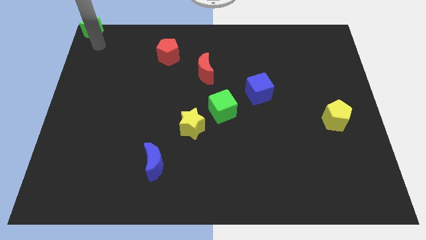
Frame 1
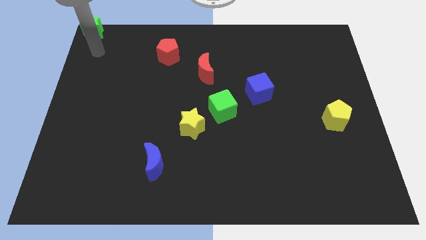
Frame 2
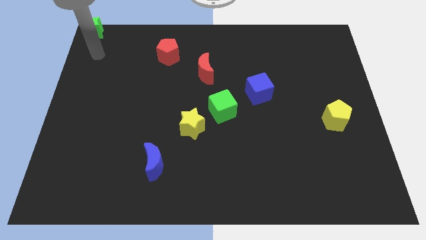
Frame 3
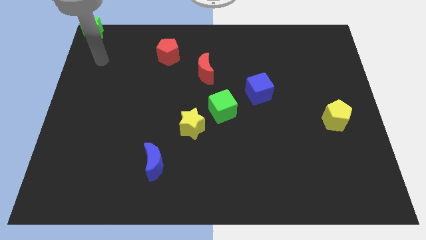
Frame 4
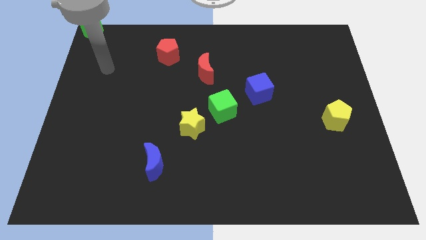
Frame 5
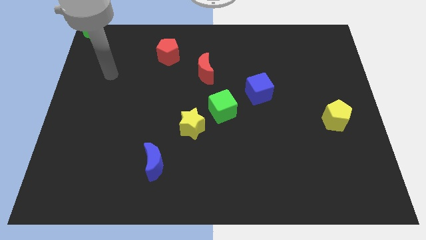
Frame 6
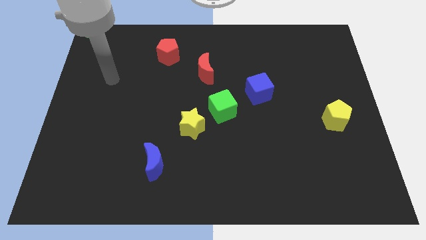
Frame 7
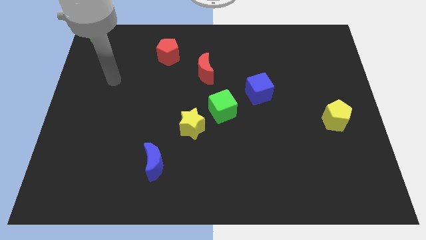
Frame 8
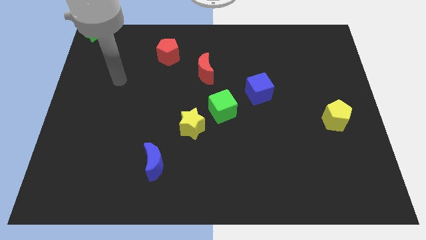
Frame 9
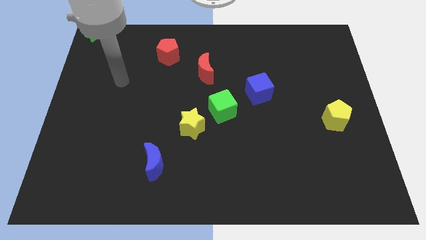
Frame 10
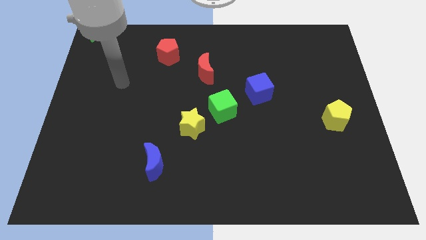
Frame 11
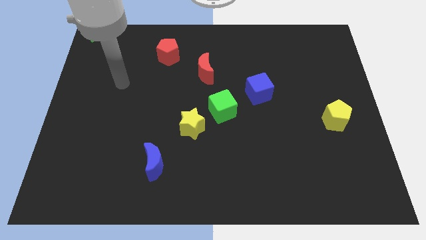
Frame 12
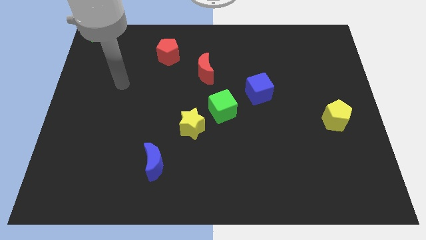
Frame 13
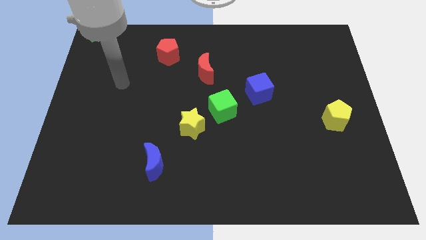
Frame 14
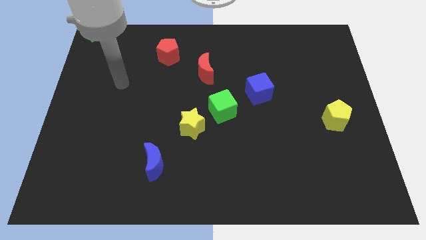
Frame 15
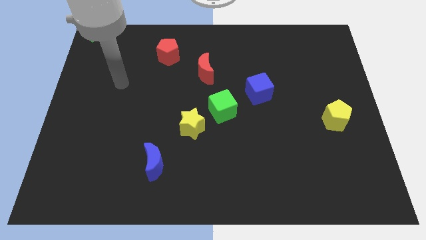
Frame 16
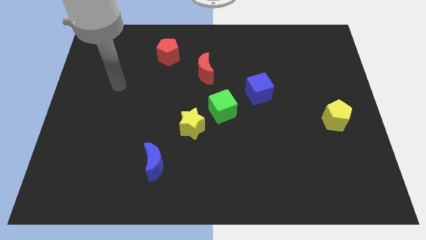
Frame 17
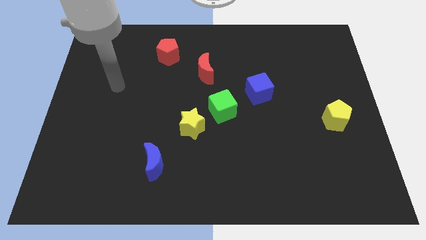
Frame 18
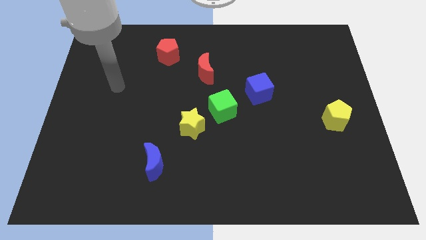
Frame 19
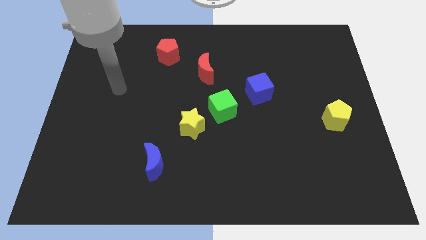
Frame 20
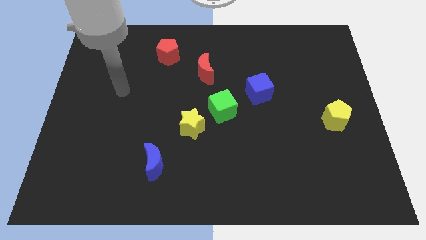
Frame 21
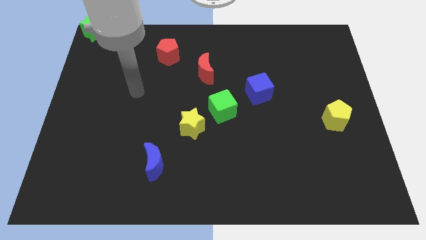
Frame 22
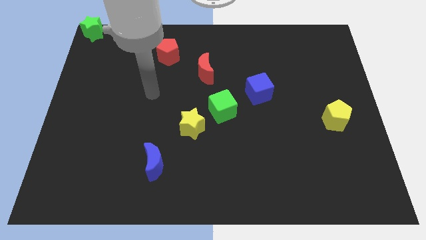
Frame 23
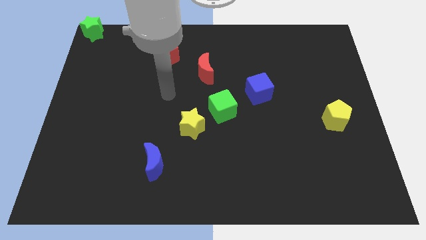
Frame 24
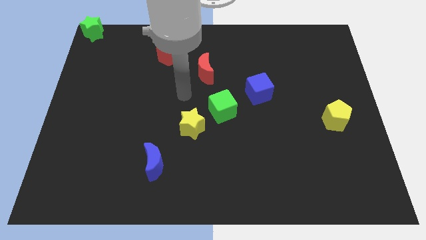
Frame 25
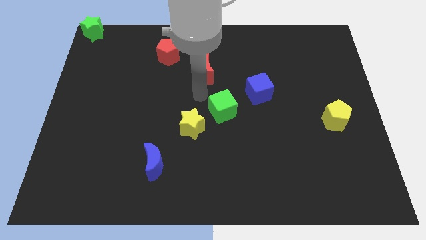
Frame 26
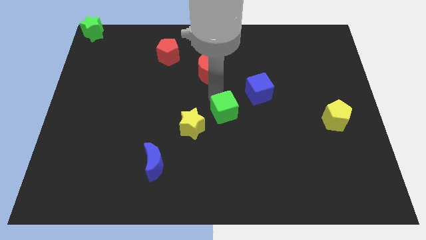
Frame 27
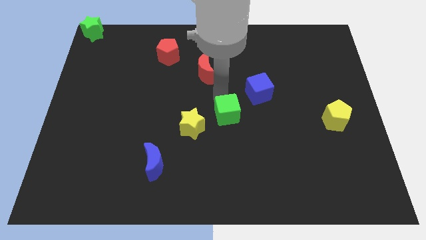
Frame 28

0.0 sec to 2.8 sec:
move your arm away from the green star

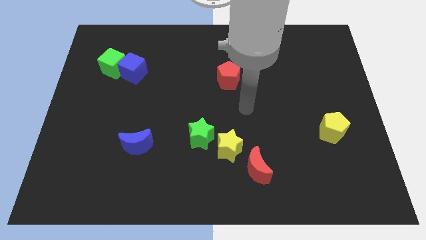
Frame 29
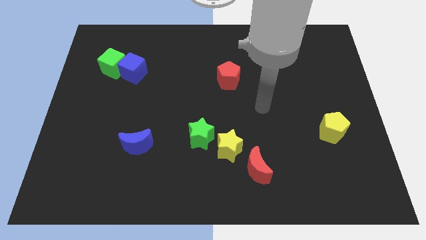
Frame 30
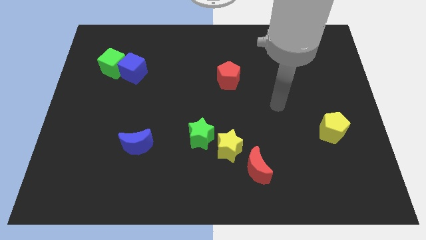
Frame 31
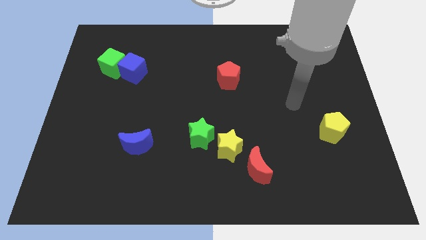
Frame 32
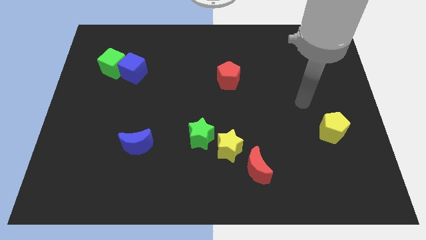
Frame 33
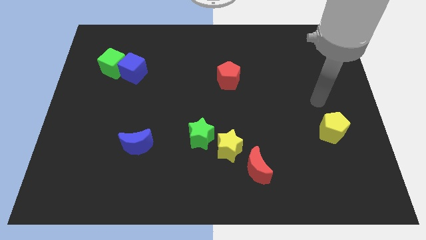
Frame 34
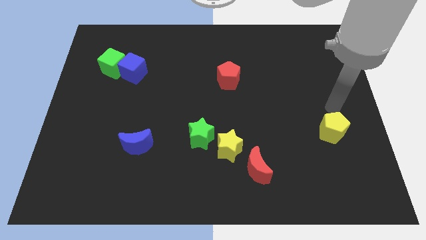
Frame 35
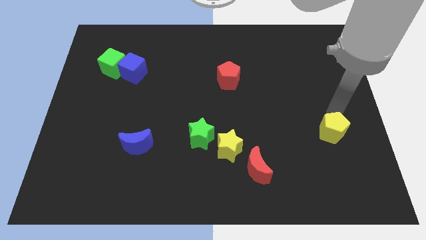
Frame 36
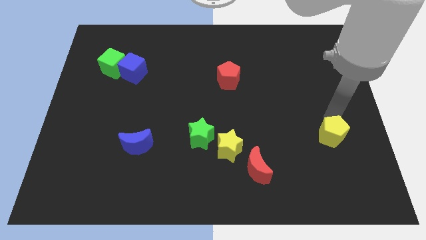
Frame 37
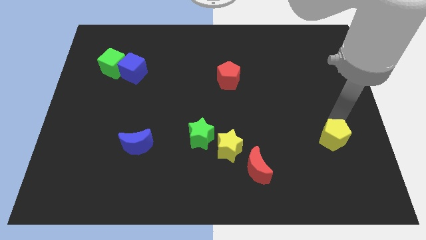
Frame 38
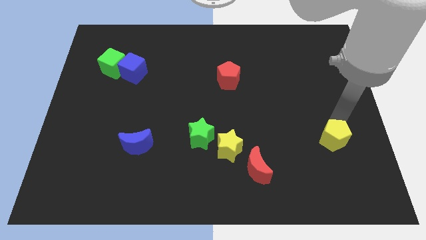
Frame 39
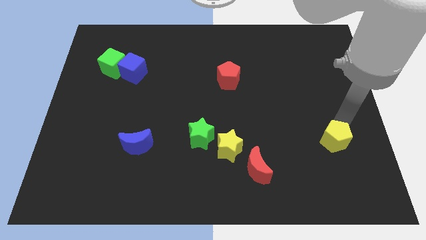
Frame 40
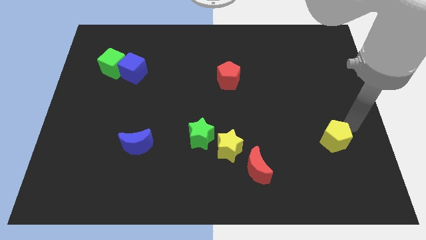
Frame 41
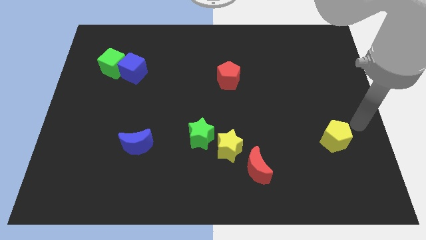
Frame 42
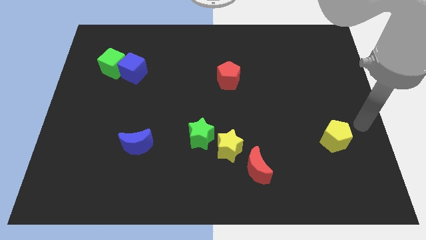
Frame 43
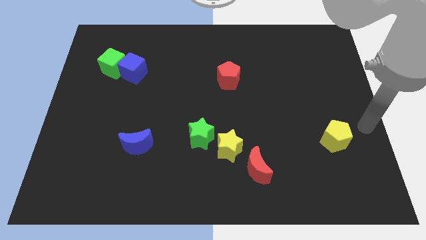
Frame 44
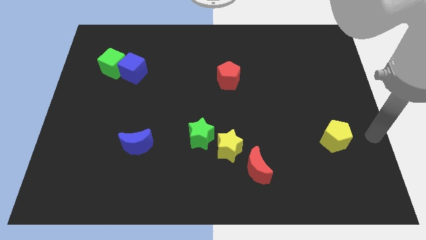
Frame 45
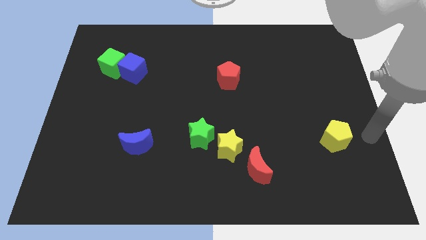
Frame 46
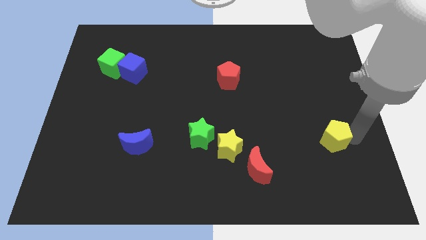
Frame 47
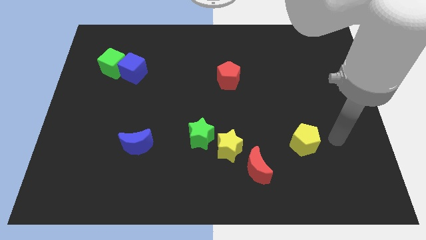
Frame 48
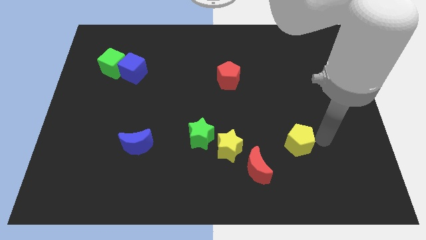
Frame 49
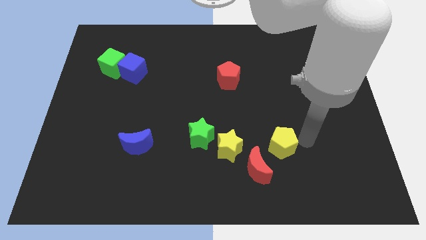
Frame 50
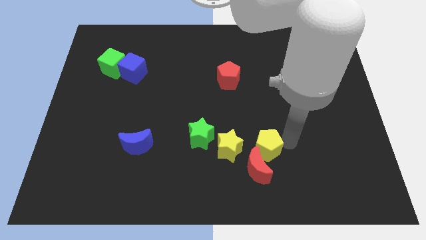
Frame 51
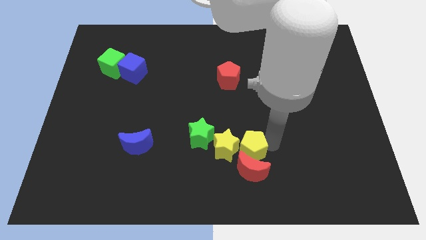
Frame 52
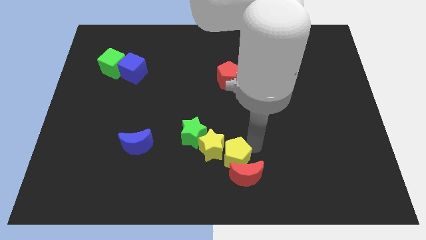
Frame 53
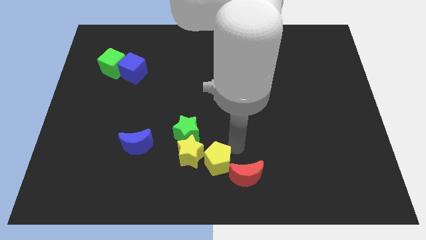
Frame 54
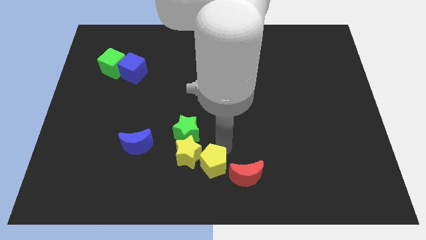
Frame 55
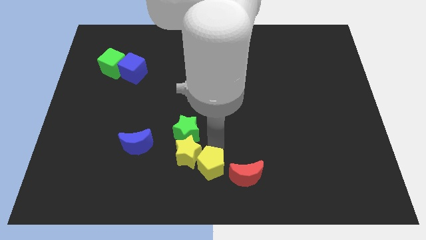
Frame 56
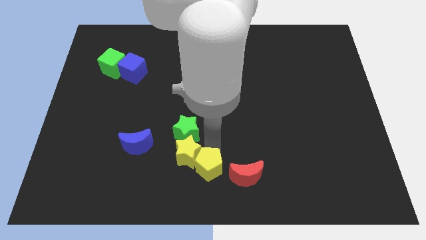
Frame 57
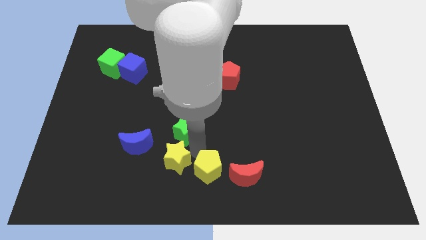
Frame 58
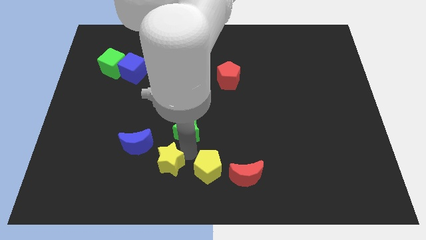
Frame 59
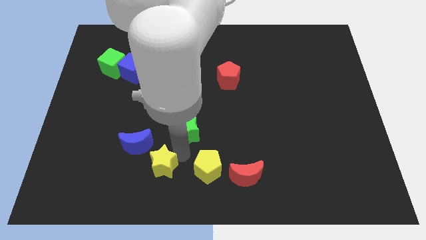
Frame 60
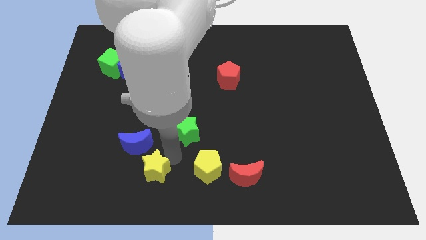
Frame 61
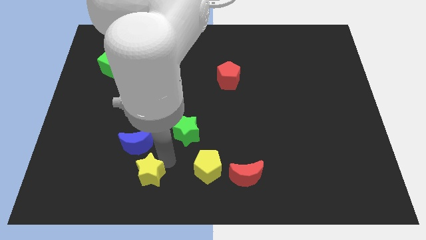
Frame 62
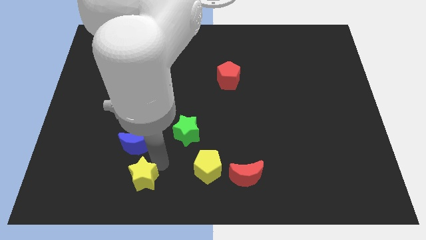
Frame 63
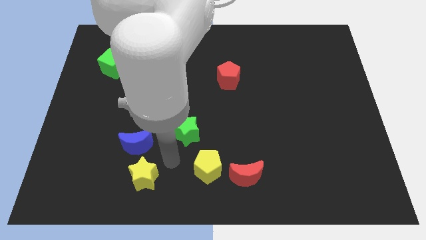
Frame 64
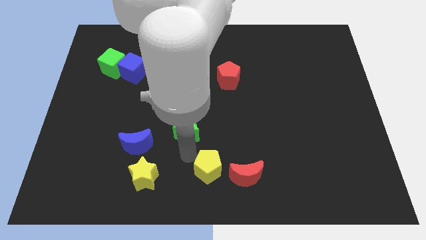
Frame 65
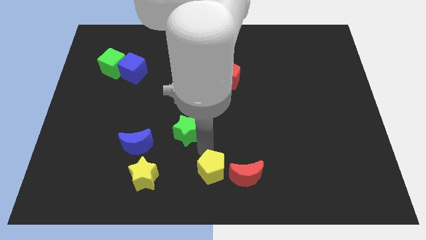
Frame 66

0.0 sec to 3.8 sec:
mmove the red moon with the yellow pentagon

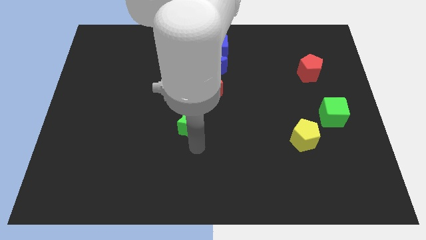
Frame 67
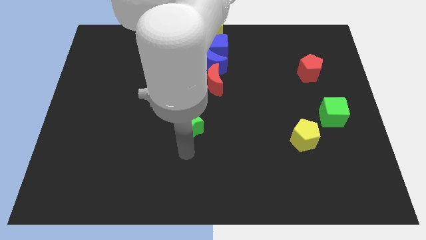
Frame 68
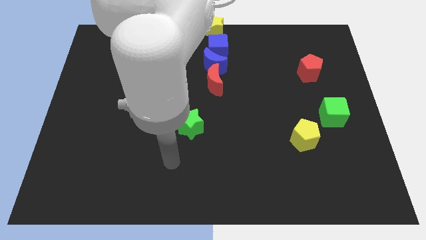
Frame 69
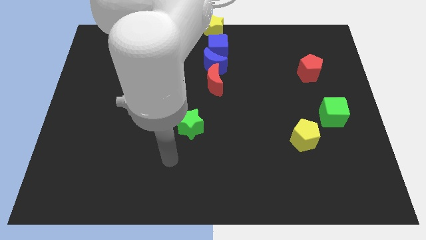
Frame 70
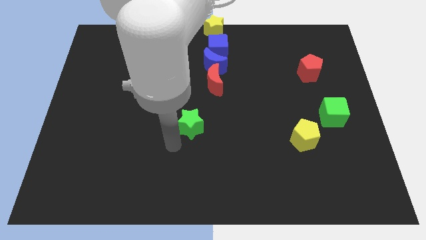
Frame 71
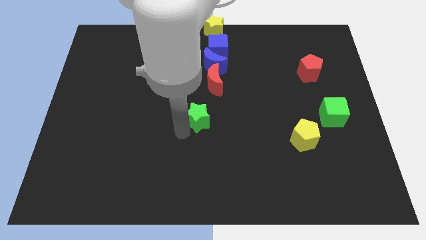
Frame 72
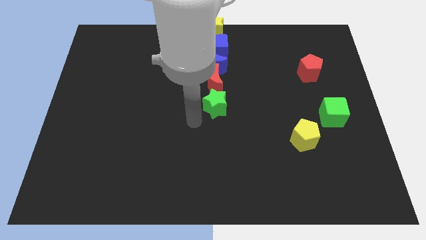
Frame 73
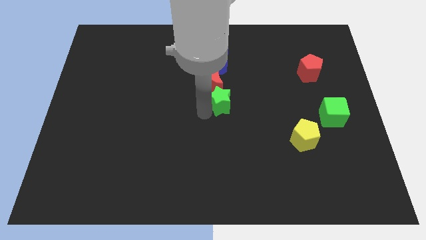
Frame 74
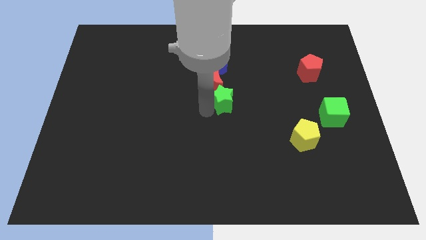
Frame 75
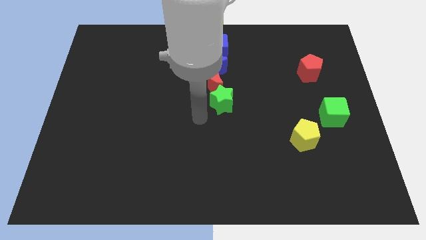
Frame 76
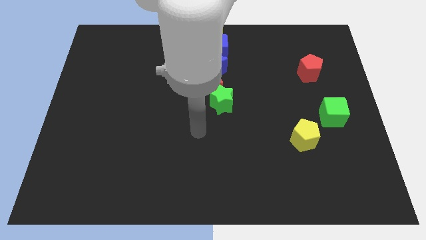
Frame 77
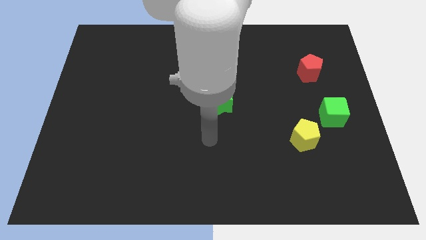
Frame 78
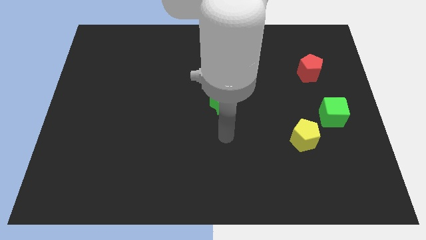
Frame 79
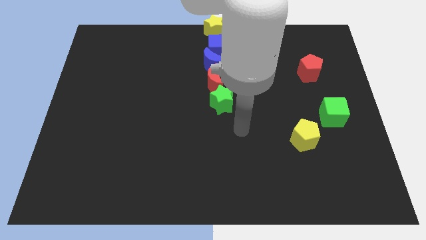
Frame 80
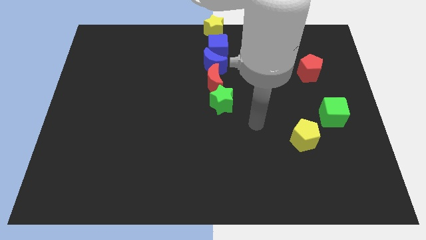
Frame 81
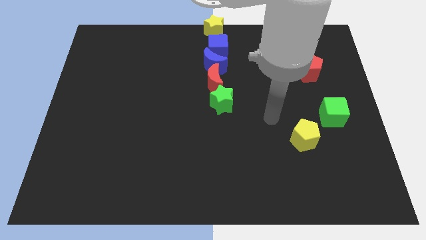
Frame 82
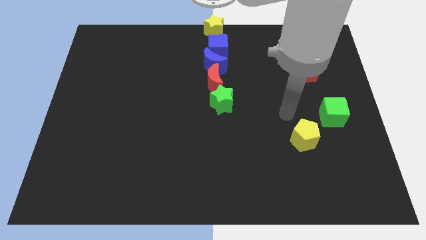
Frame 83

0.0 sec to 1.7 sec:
move the green star into the red moon

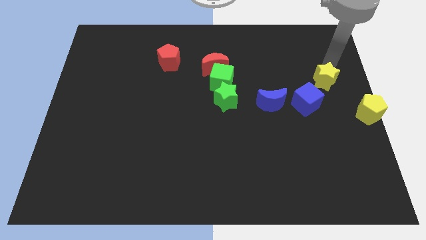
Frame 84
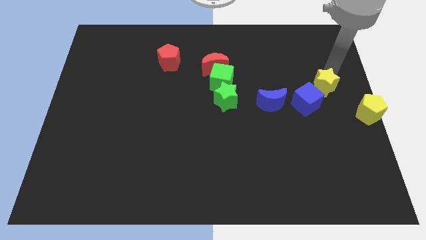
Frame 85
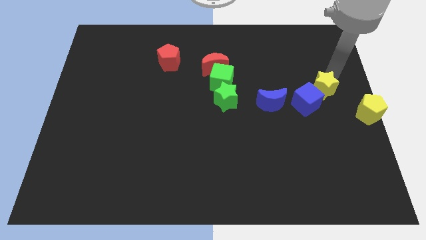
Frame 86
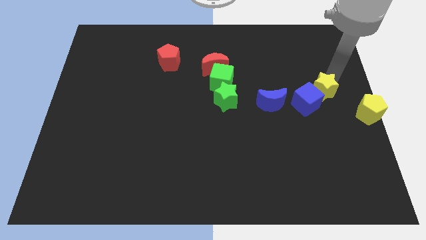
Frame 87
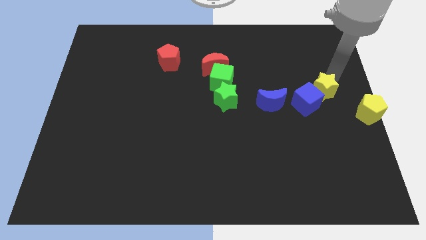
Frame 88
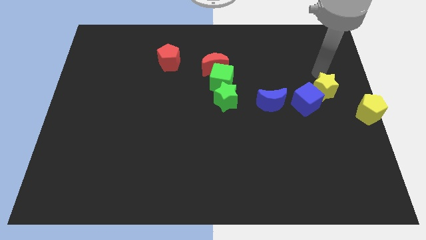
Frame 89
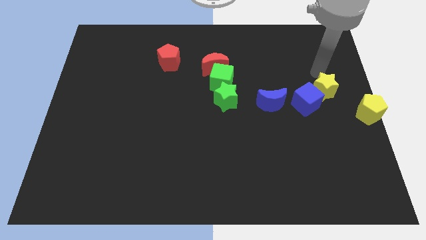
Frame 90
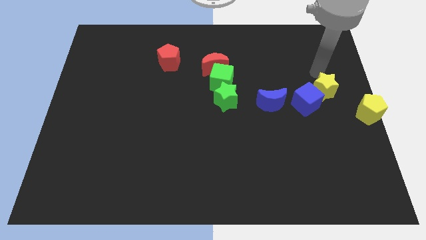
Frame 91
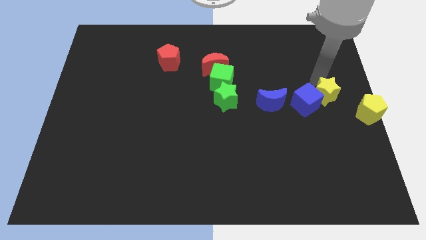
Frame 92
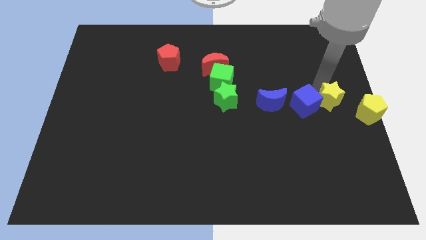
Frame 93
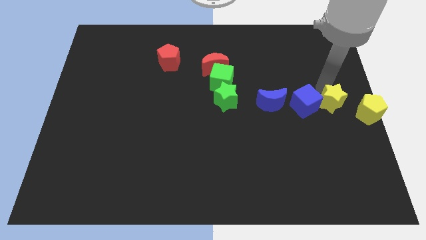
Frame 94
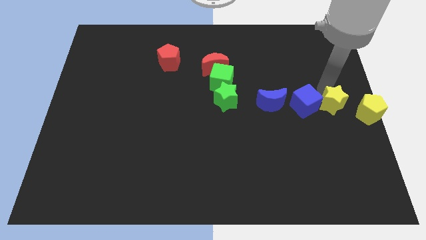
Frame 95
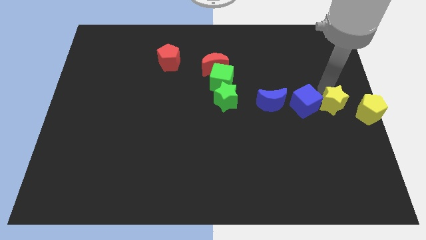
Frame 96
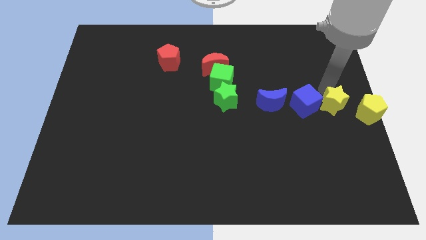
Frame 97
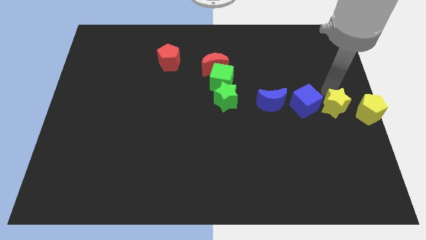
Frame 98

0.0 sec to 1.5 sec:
push the yellow star between yellow pentagon and blue cube
